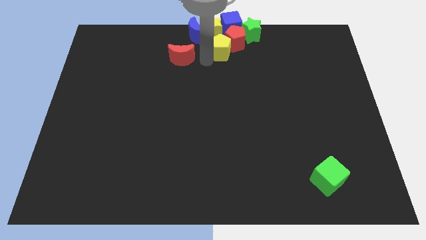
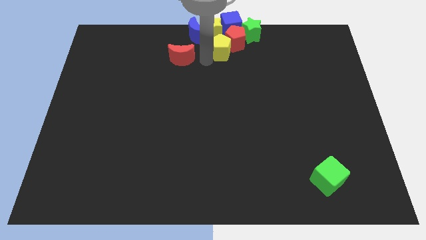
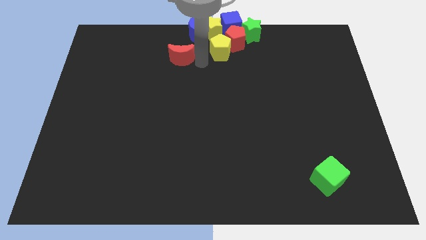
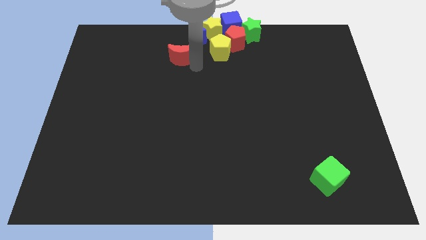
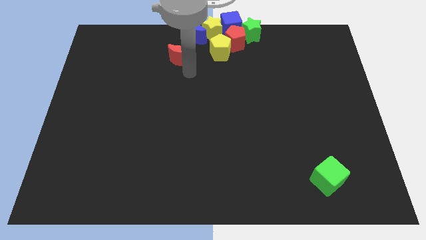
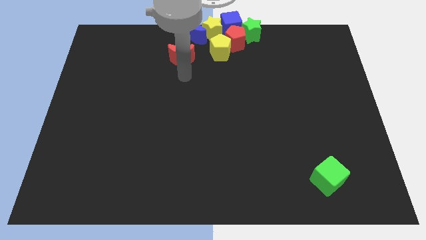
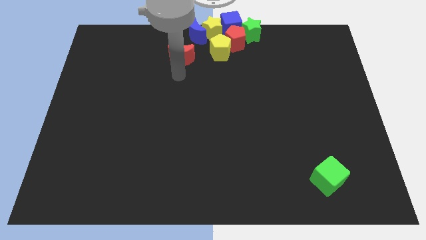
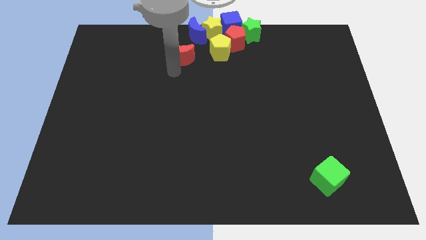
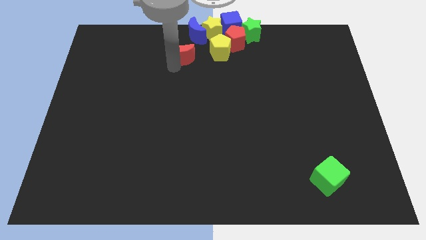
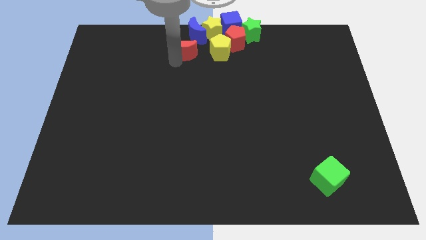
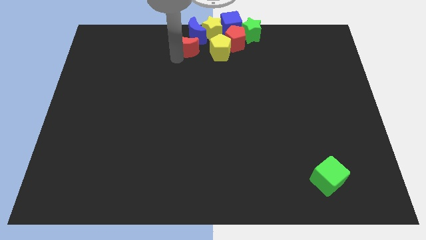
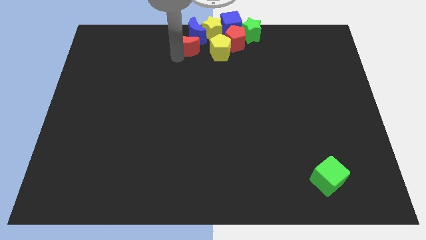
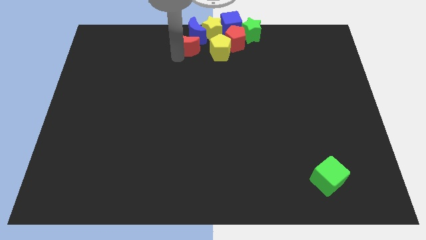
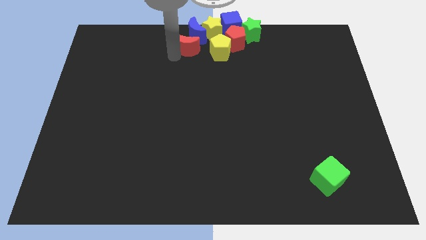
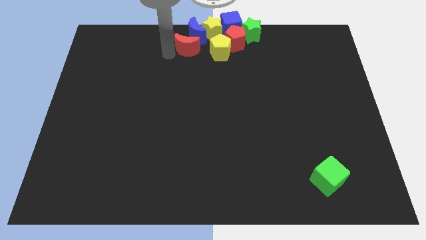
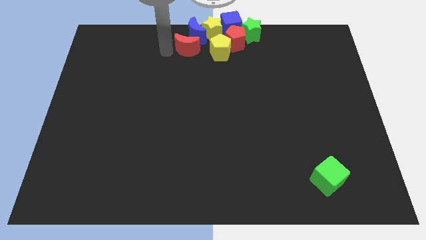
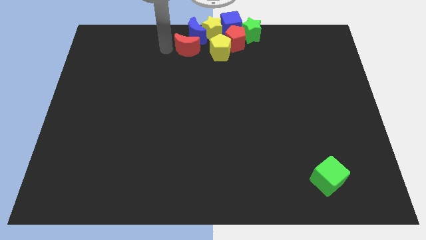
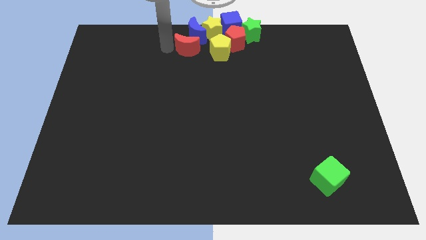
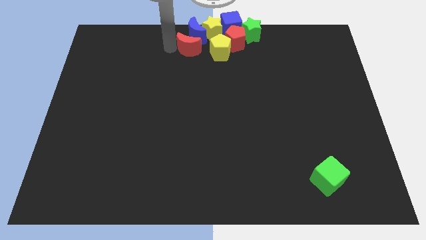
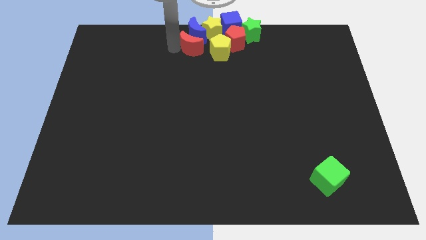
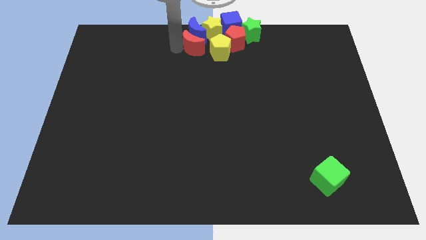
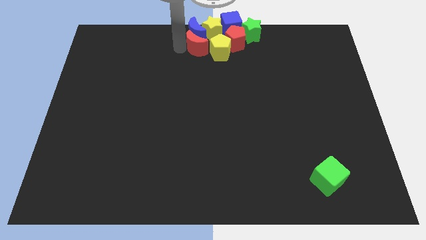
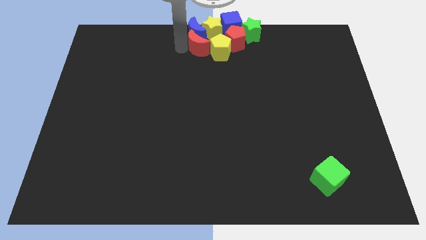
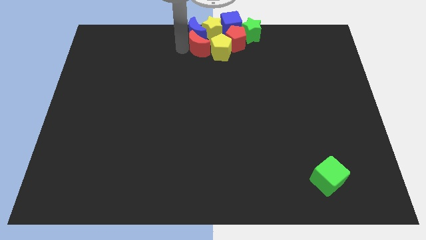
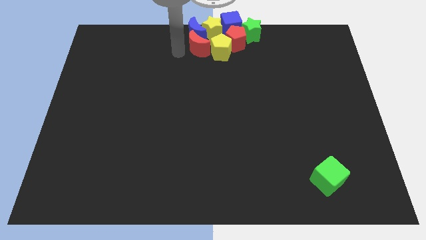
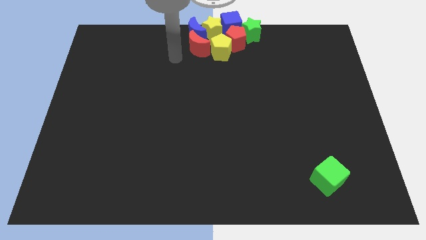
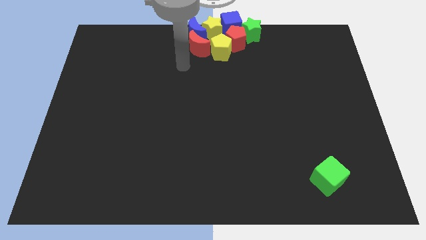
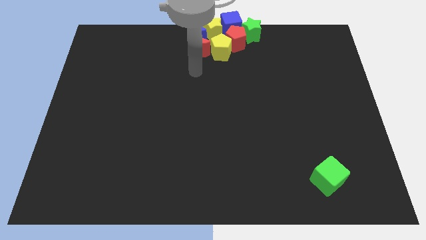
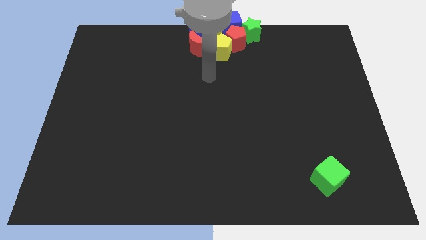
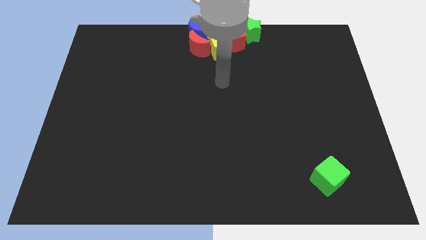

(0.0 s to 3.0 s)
push the red crescent towards the yellow pentagon

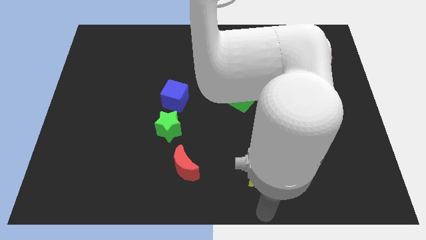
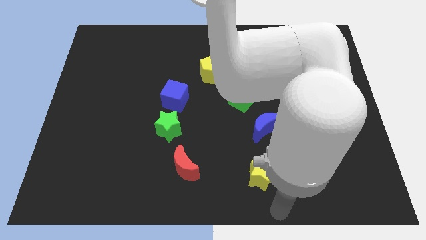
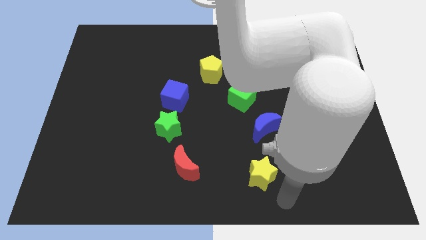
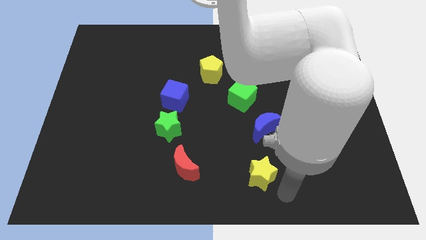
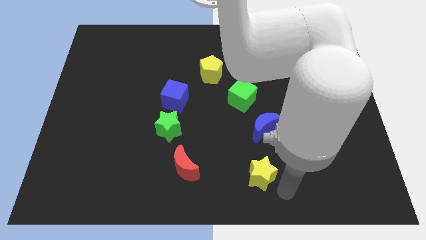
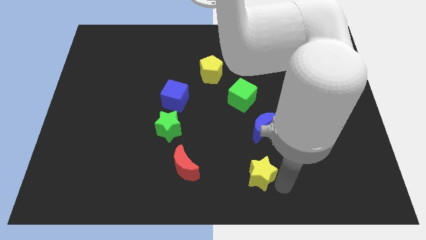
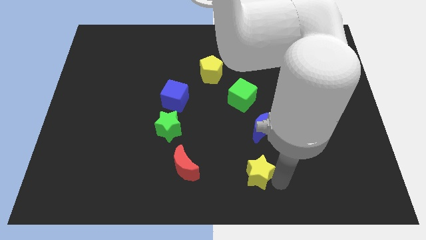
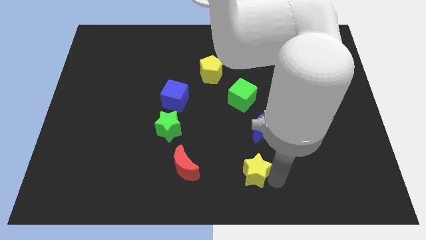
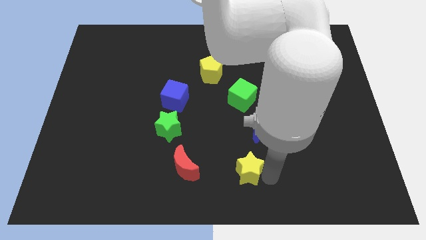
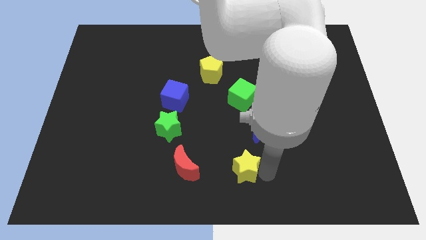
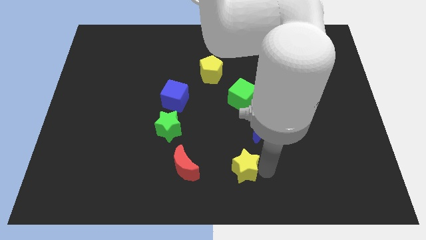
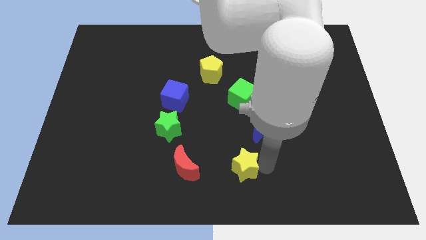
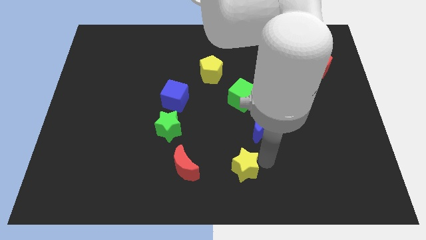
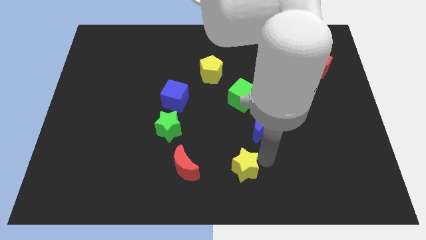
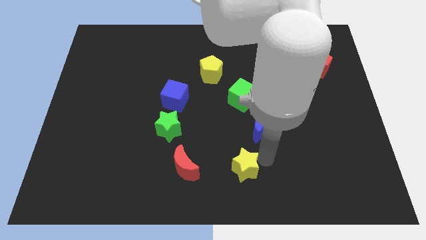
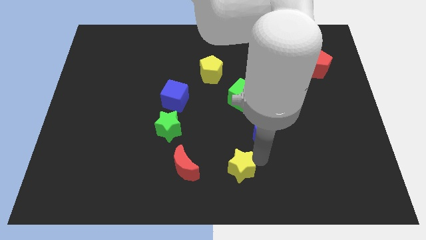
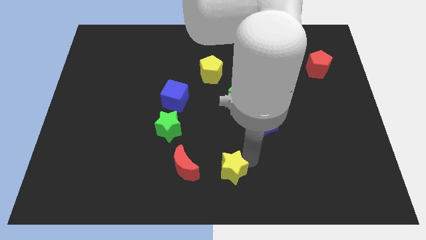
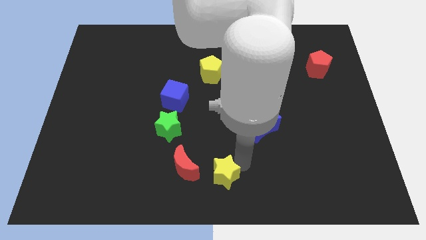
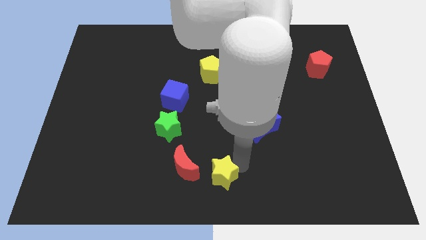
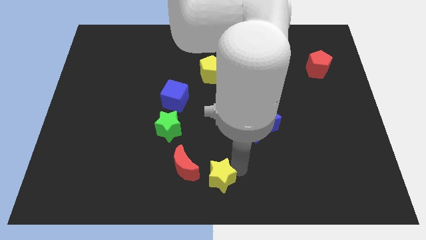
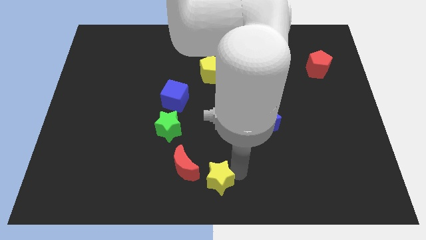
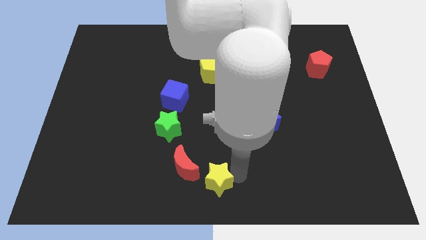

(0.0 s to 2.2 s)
place the yellow star vertically below the yellow pentagon

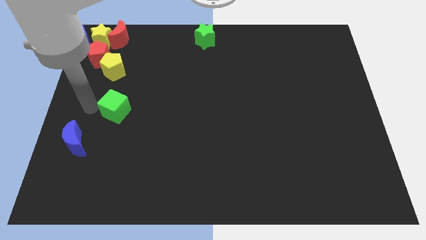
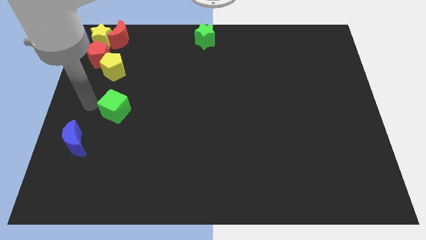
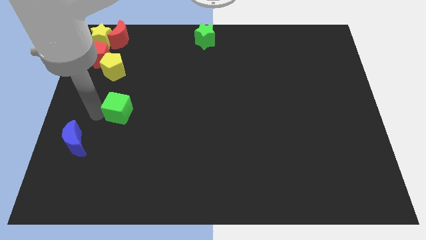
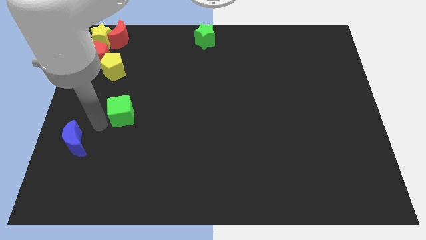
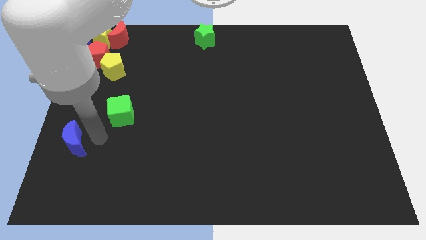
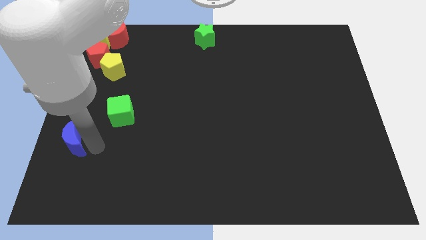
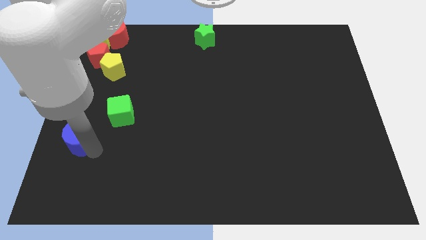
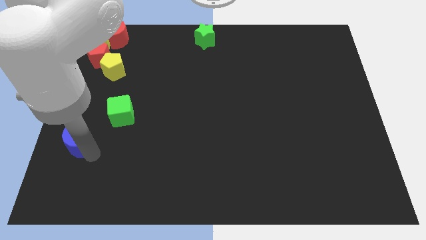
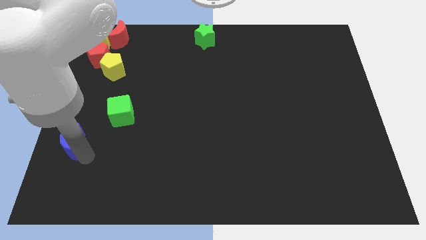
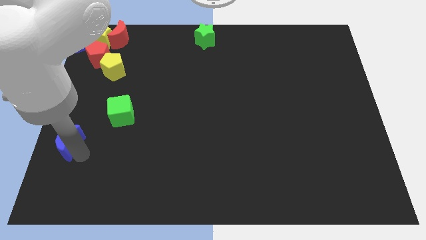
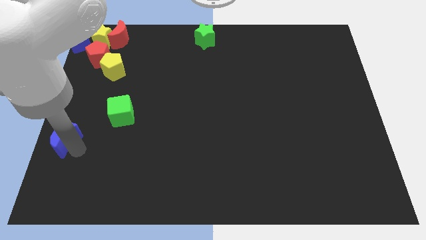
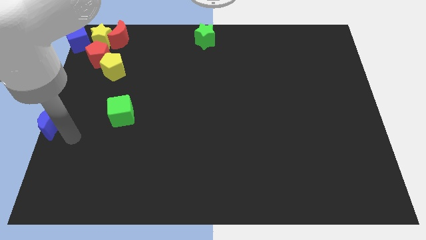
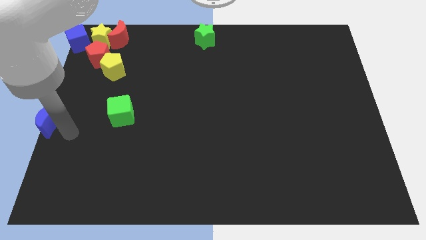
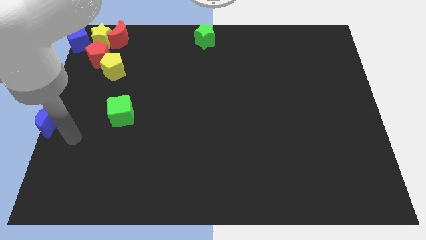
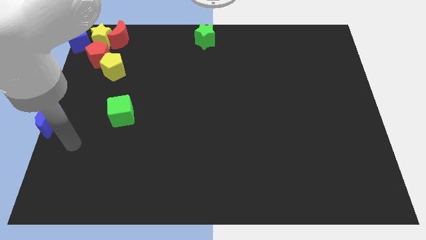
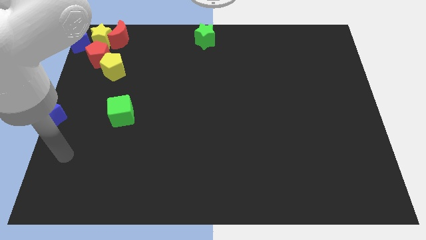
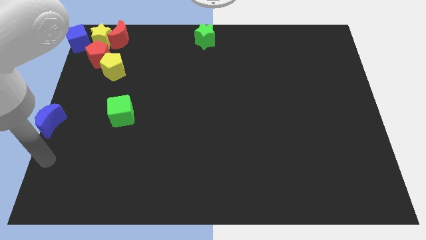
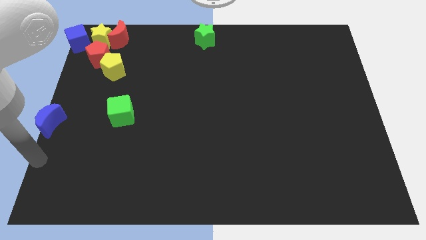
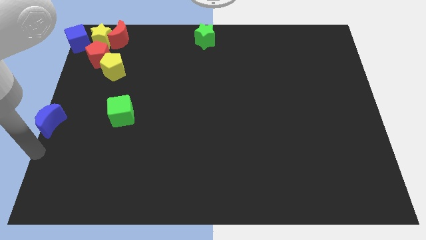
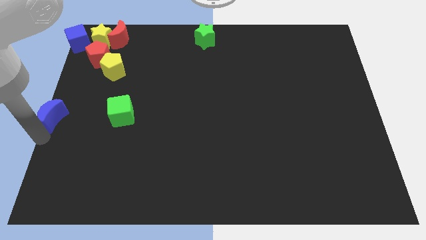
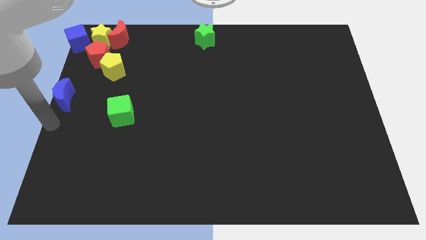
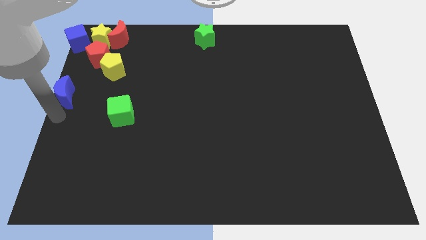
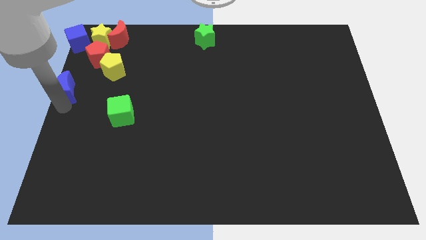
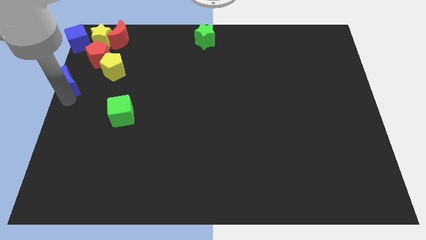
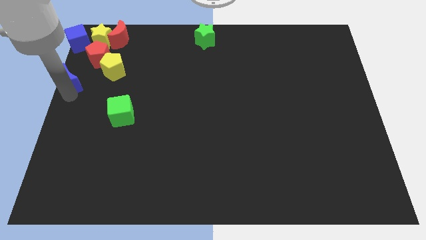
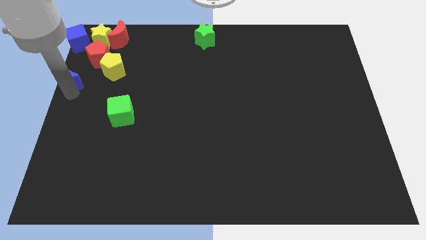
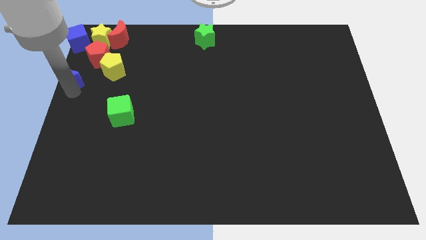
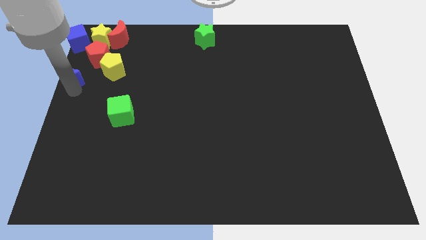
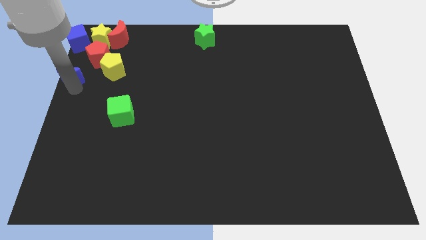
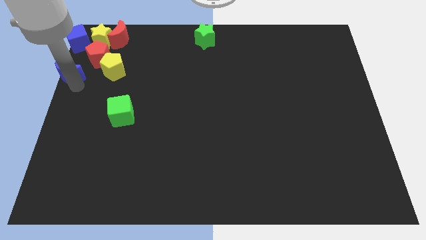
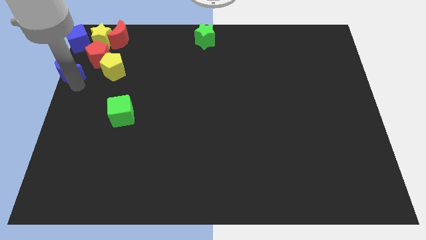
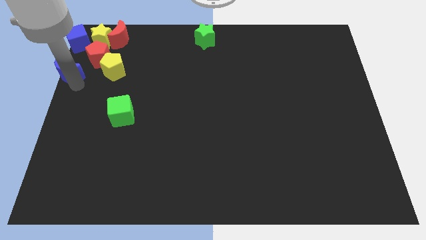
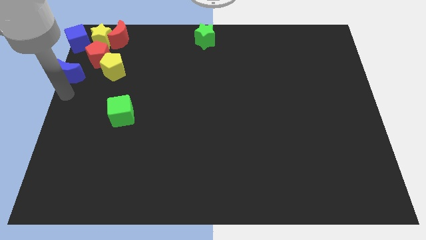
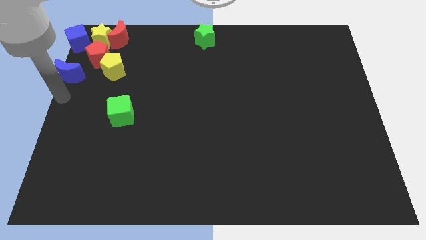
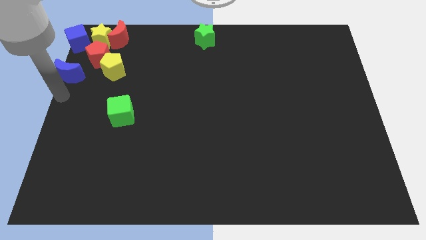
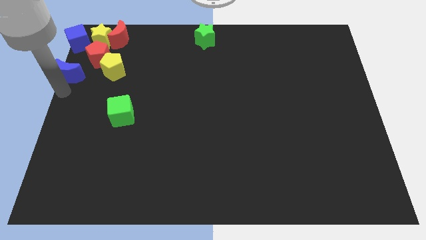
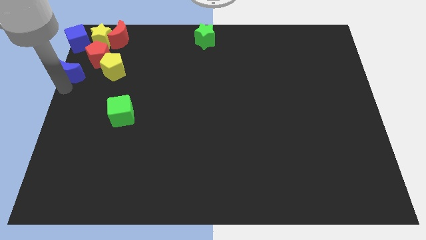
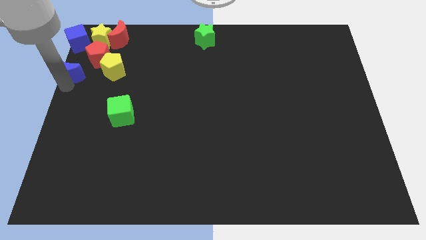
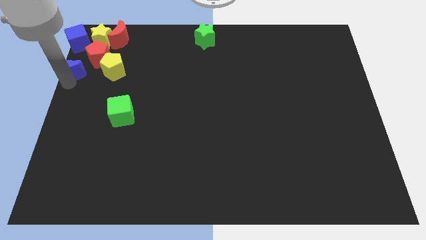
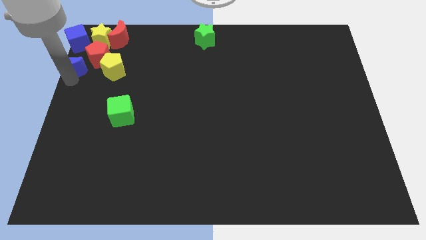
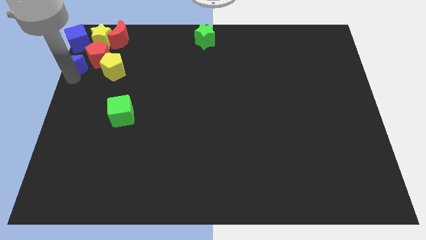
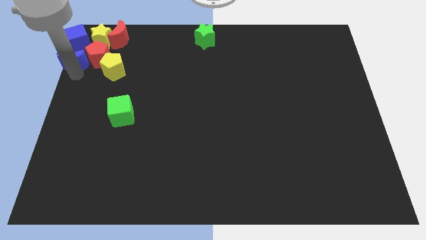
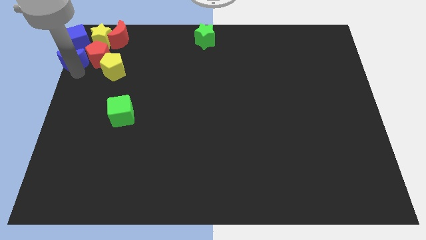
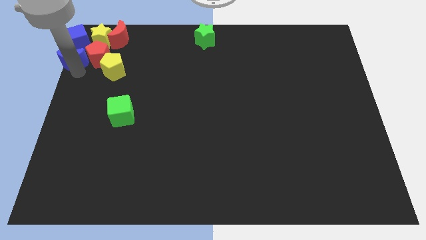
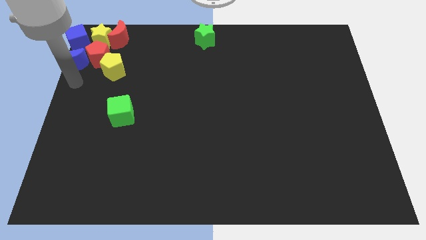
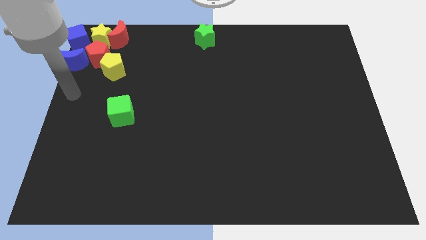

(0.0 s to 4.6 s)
put the blue crescent to the left of the red pentagon
